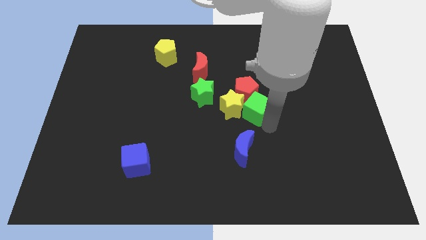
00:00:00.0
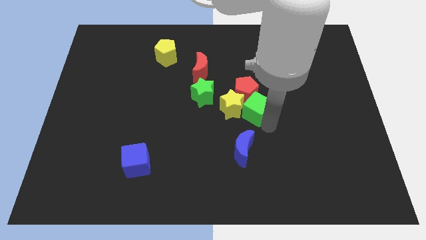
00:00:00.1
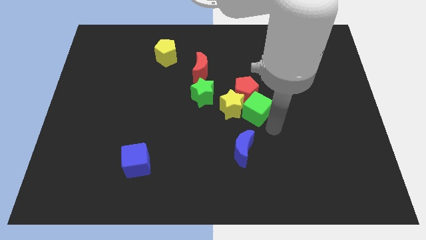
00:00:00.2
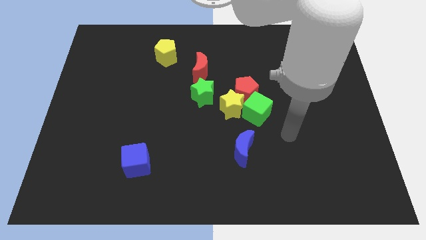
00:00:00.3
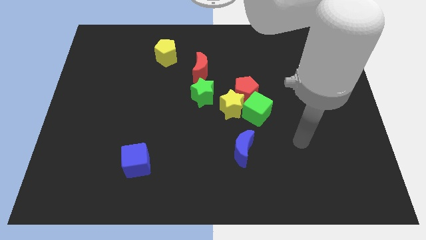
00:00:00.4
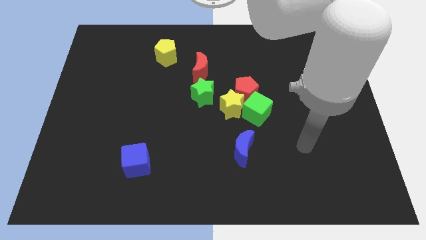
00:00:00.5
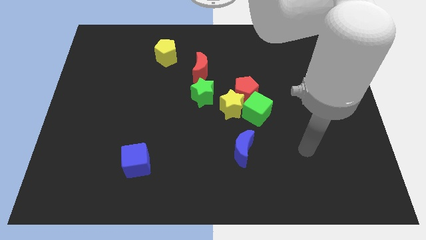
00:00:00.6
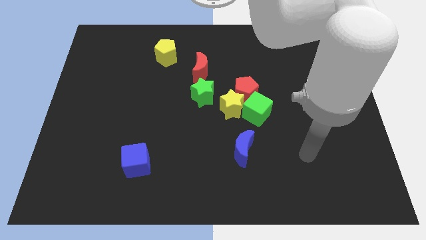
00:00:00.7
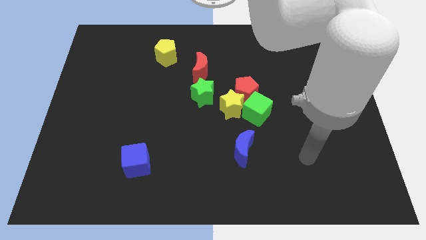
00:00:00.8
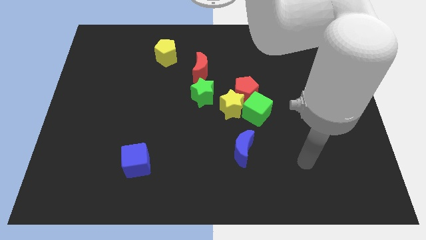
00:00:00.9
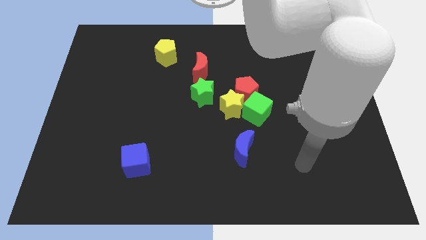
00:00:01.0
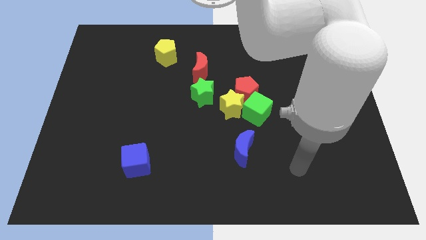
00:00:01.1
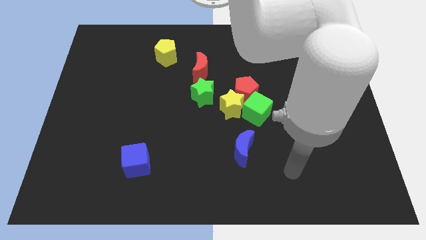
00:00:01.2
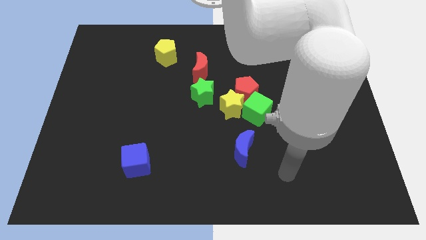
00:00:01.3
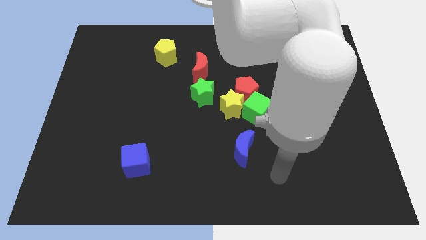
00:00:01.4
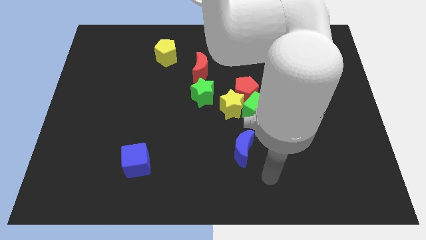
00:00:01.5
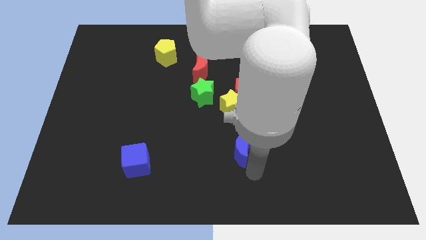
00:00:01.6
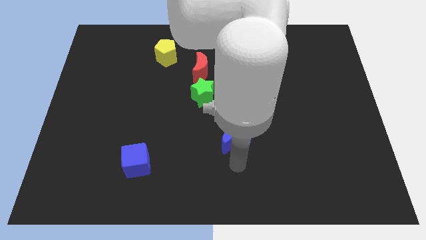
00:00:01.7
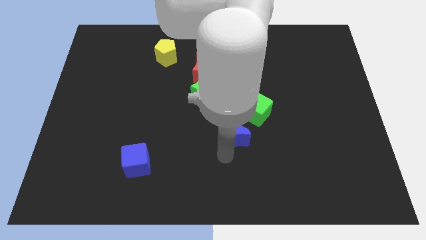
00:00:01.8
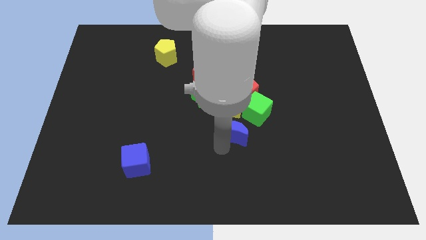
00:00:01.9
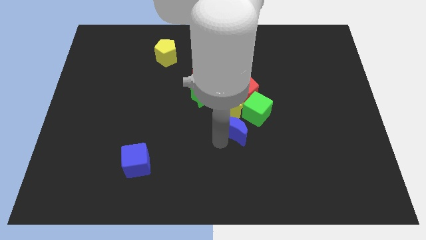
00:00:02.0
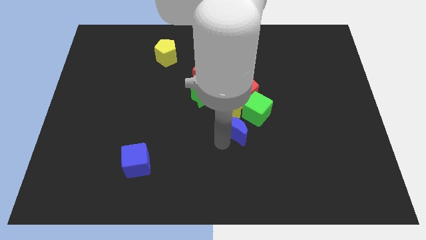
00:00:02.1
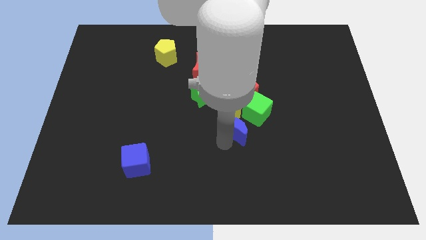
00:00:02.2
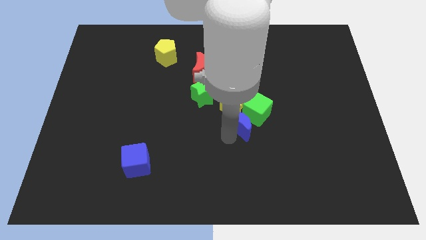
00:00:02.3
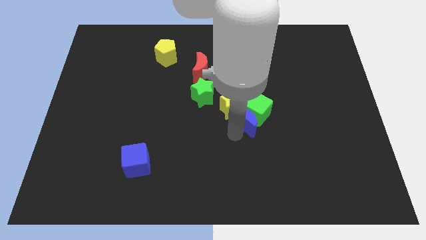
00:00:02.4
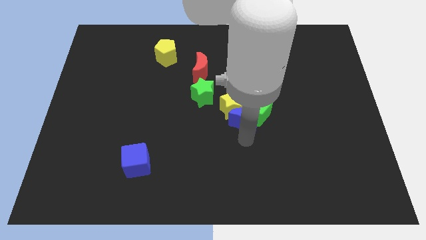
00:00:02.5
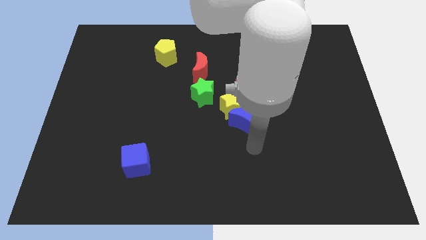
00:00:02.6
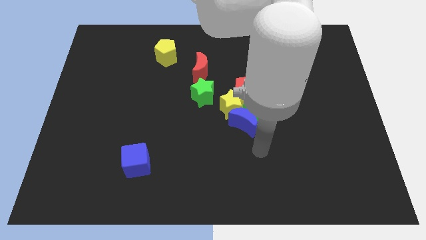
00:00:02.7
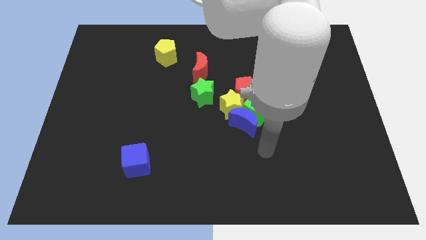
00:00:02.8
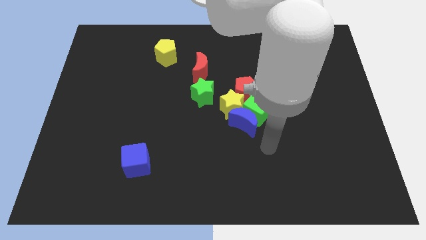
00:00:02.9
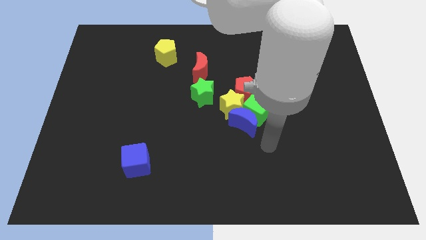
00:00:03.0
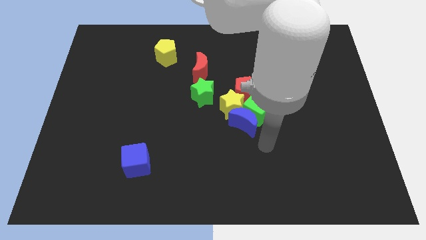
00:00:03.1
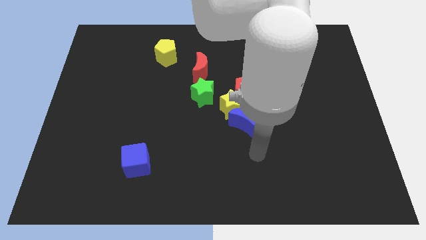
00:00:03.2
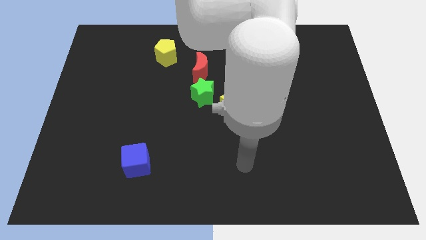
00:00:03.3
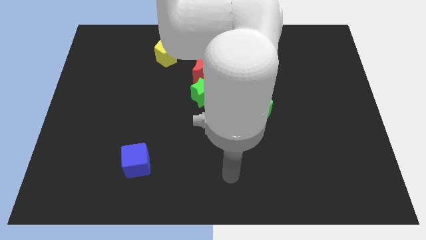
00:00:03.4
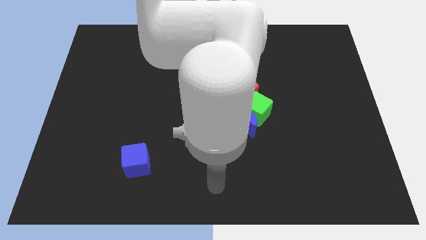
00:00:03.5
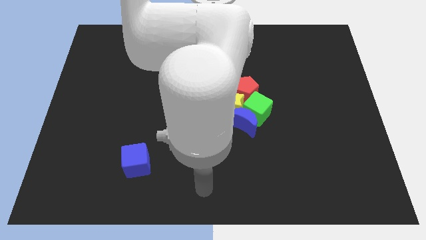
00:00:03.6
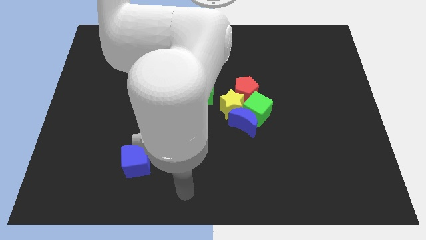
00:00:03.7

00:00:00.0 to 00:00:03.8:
place the blue crescent down to the yellow star and green cube

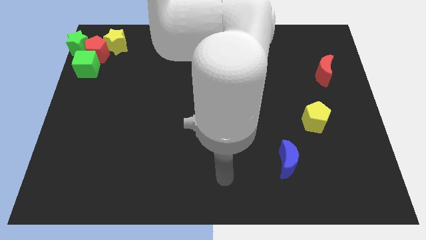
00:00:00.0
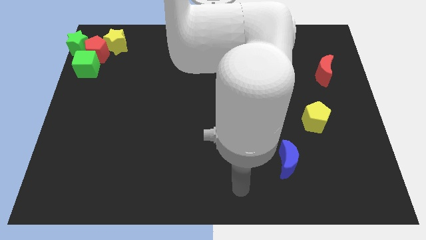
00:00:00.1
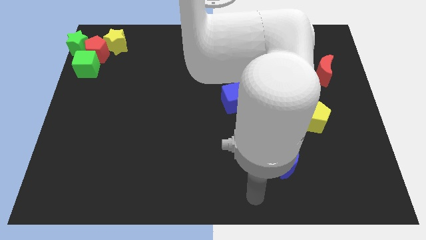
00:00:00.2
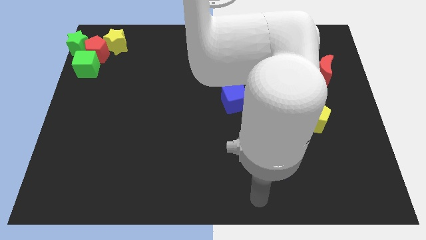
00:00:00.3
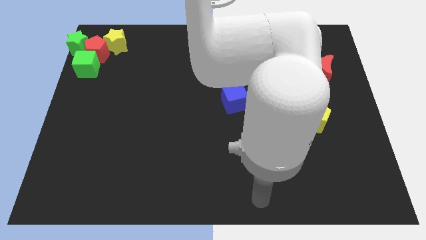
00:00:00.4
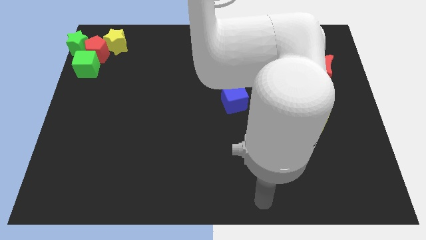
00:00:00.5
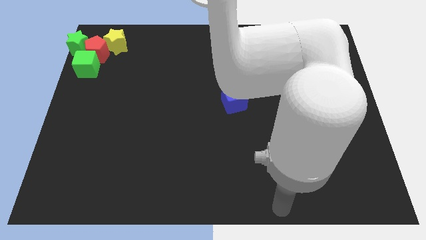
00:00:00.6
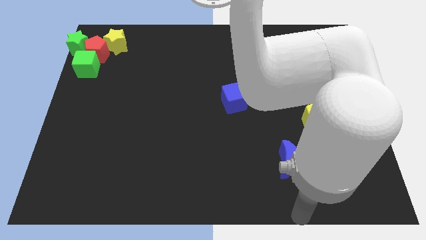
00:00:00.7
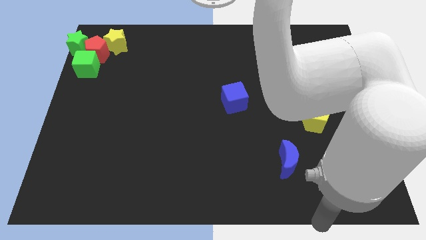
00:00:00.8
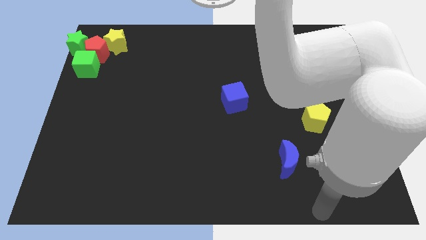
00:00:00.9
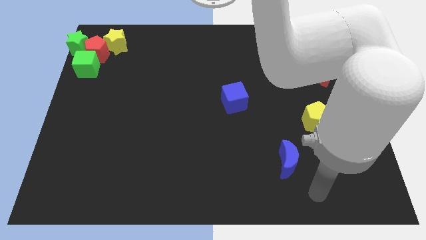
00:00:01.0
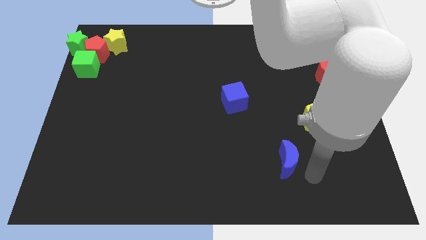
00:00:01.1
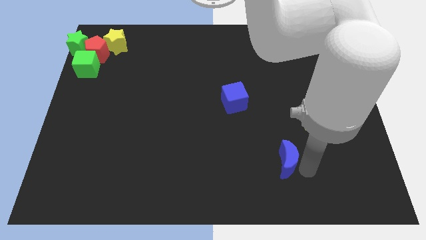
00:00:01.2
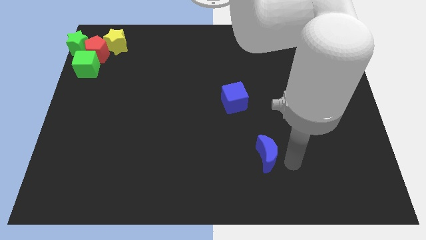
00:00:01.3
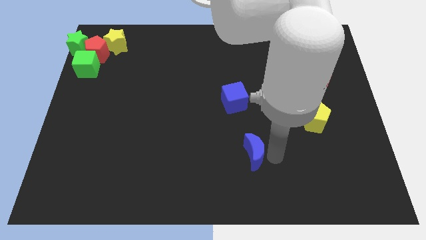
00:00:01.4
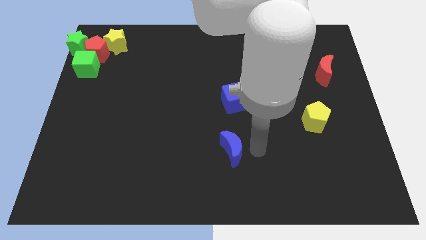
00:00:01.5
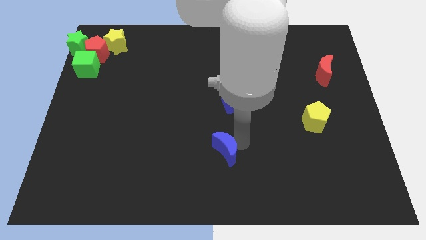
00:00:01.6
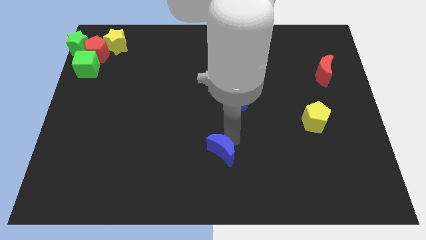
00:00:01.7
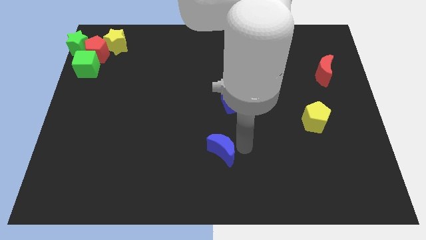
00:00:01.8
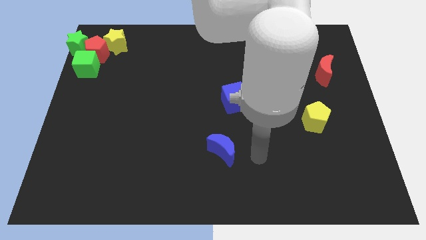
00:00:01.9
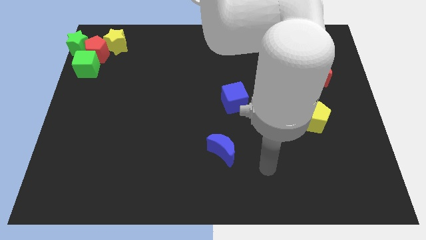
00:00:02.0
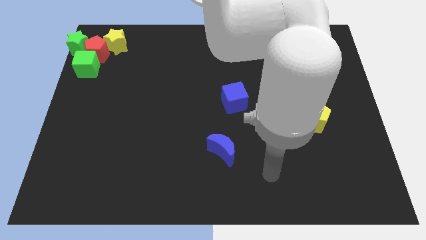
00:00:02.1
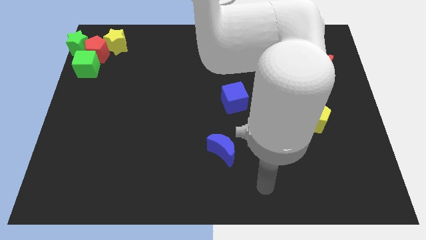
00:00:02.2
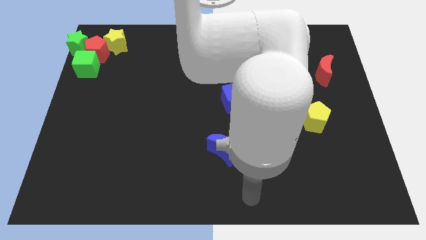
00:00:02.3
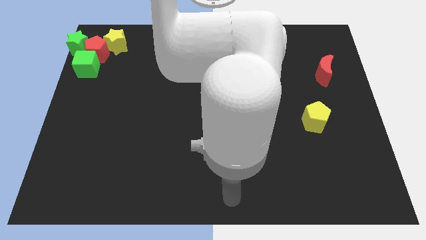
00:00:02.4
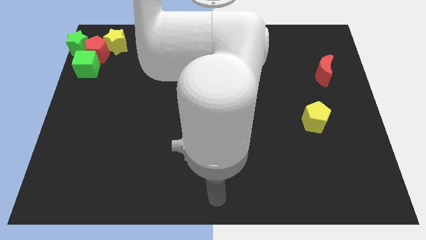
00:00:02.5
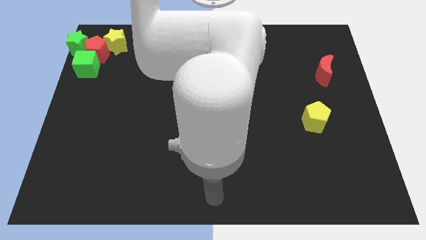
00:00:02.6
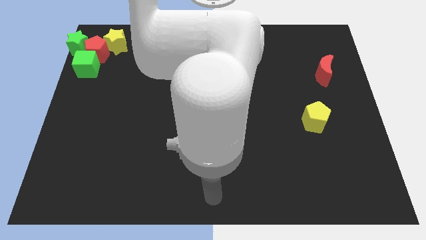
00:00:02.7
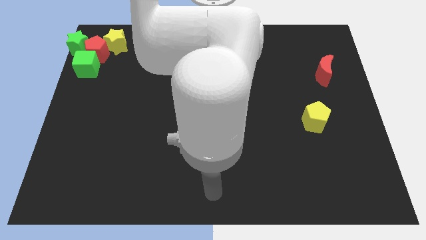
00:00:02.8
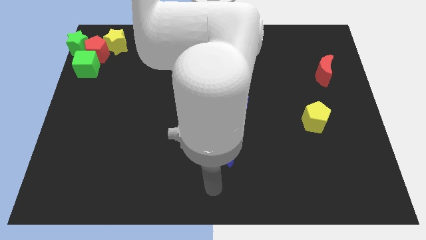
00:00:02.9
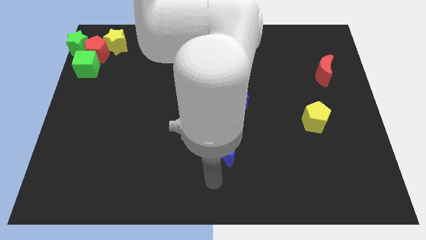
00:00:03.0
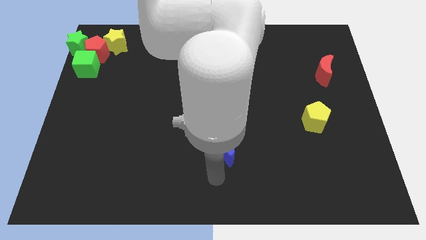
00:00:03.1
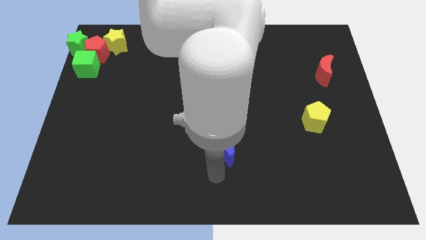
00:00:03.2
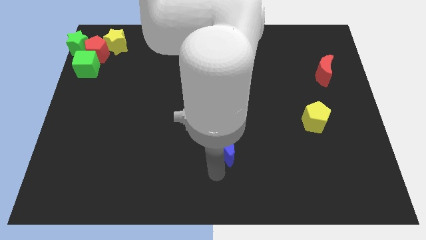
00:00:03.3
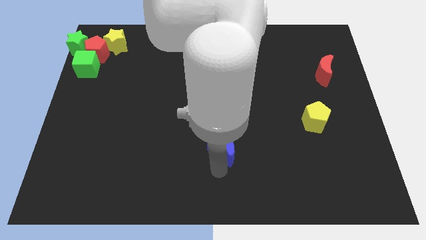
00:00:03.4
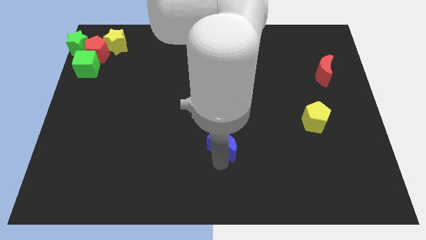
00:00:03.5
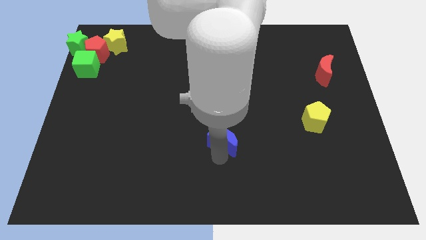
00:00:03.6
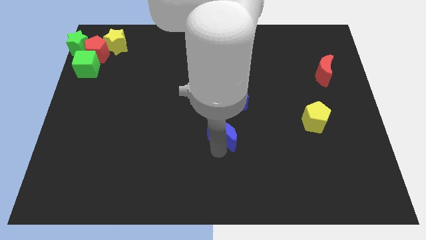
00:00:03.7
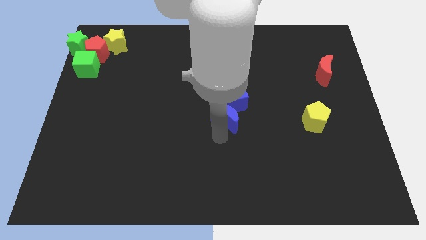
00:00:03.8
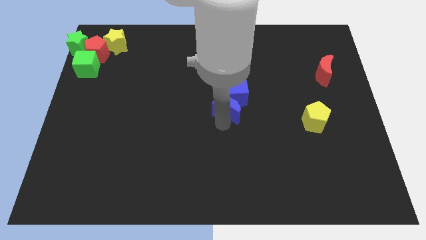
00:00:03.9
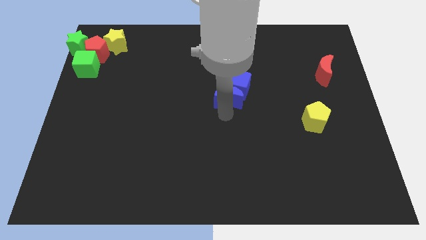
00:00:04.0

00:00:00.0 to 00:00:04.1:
move the blue crescent towards the blue cube

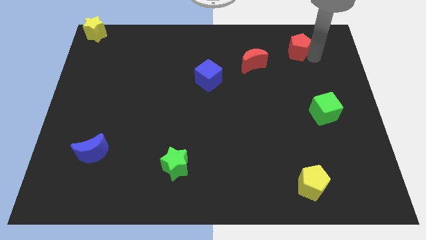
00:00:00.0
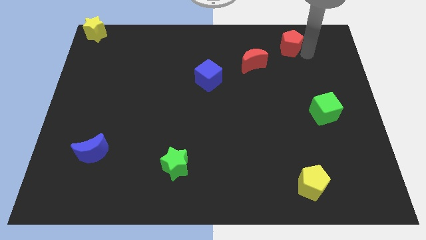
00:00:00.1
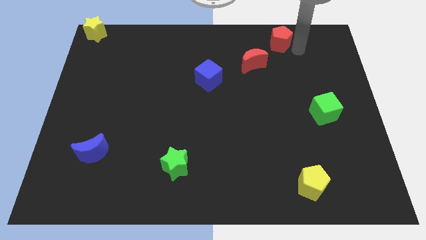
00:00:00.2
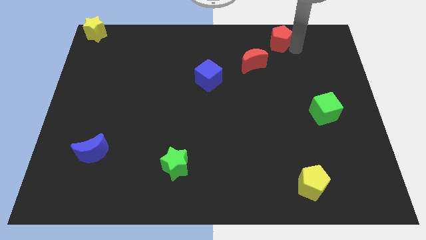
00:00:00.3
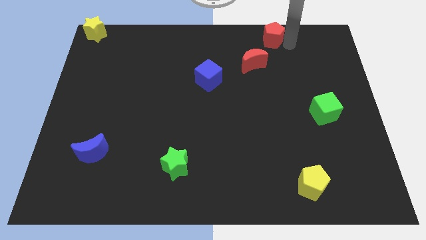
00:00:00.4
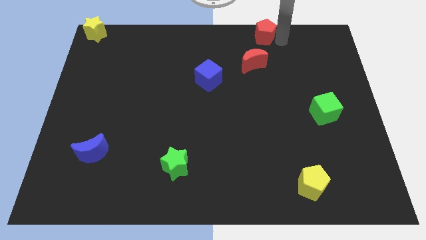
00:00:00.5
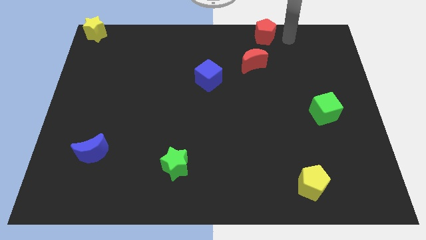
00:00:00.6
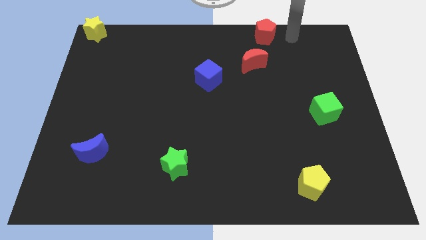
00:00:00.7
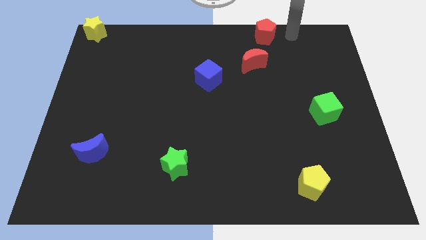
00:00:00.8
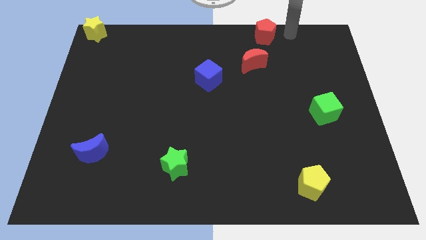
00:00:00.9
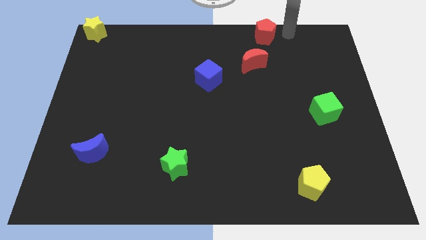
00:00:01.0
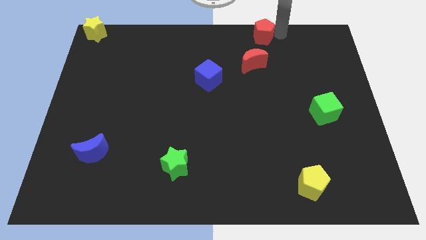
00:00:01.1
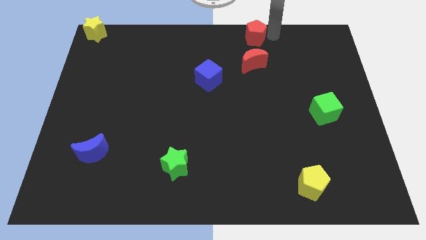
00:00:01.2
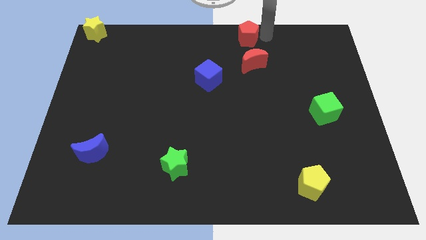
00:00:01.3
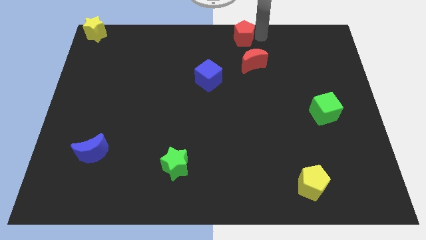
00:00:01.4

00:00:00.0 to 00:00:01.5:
push the red pentagon vertical to red moon
